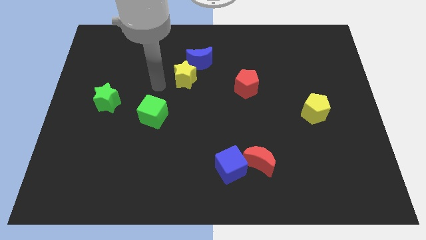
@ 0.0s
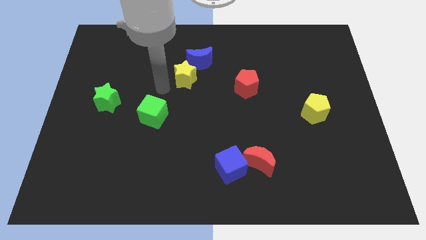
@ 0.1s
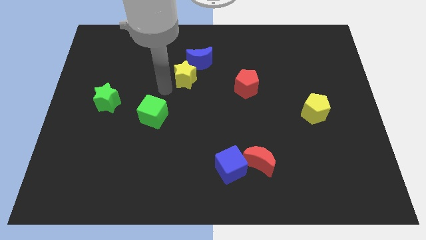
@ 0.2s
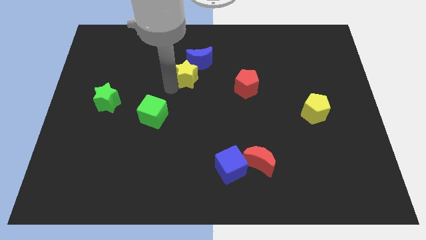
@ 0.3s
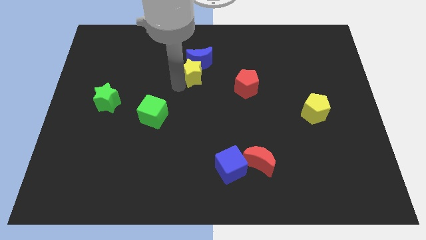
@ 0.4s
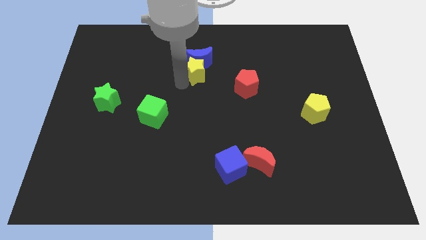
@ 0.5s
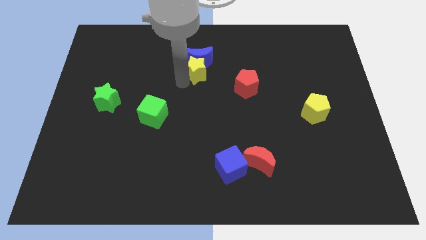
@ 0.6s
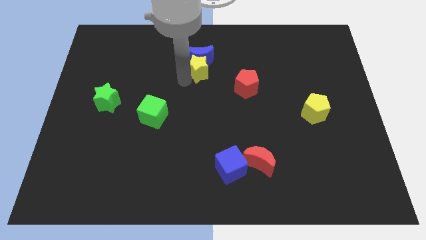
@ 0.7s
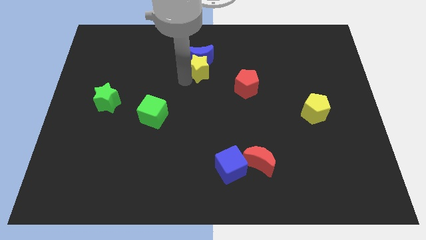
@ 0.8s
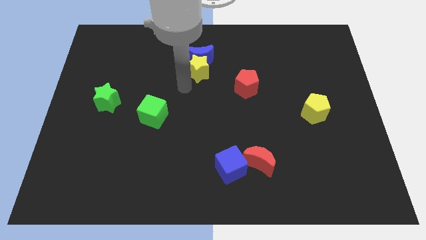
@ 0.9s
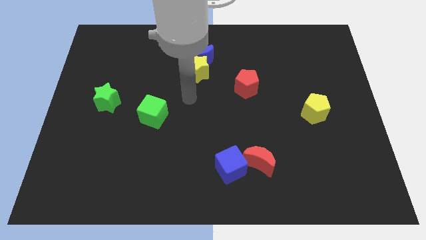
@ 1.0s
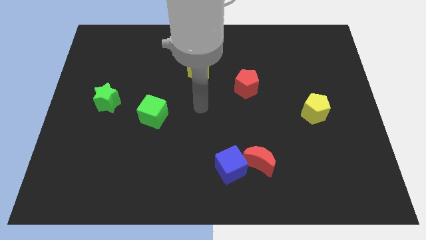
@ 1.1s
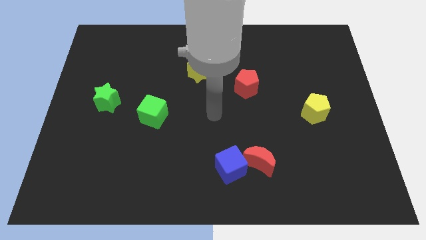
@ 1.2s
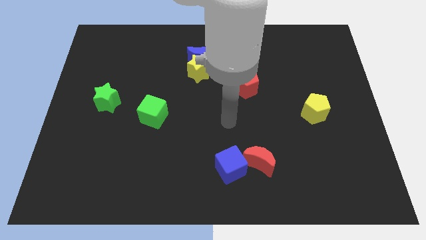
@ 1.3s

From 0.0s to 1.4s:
move yellow star into blue moon

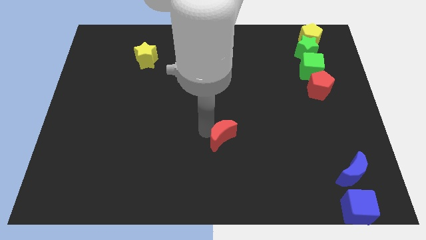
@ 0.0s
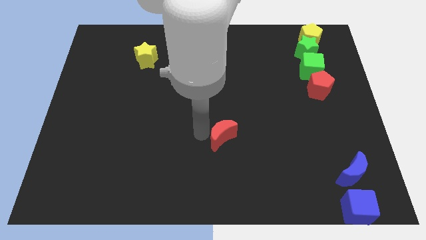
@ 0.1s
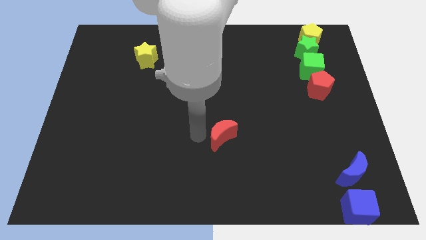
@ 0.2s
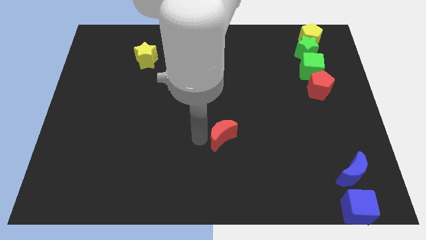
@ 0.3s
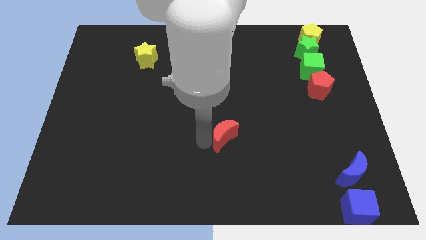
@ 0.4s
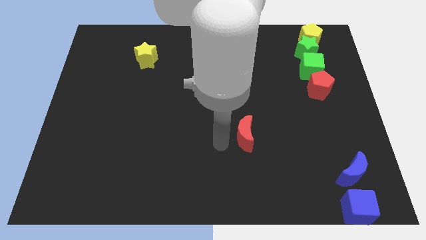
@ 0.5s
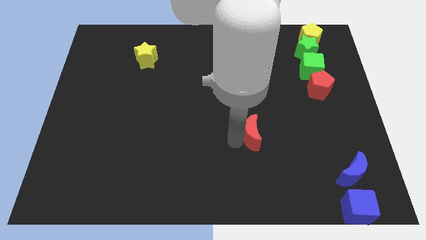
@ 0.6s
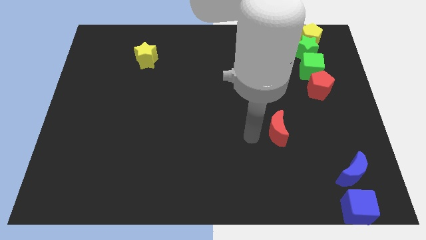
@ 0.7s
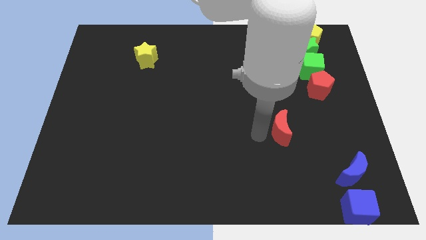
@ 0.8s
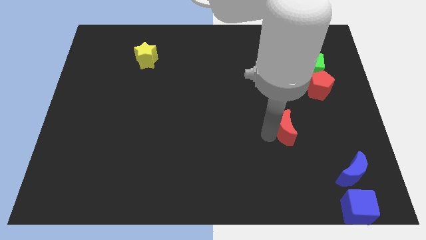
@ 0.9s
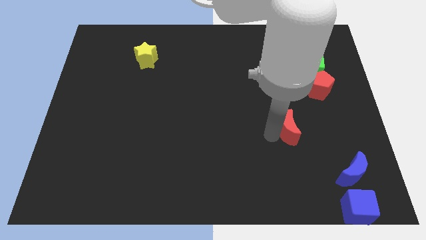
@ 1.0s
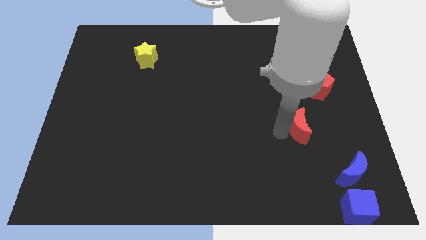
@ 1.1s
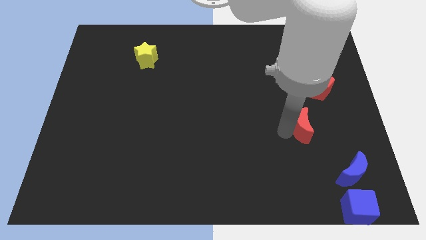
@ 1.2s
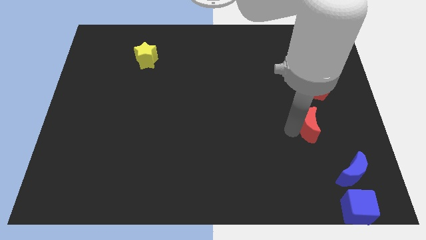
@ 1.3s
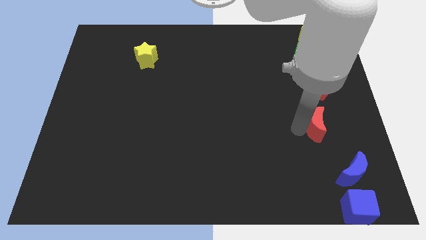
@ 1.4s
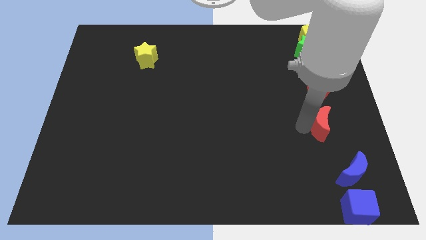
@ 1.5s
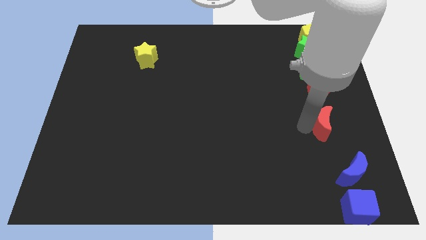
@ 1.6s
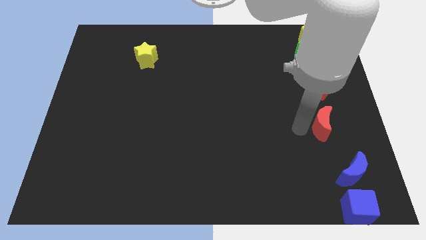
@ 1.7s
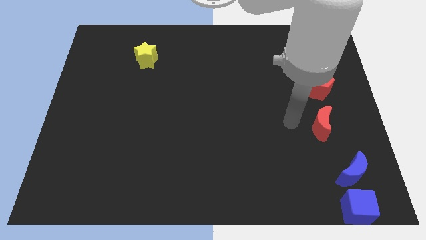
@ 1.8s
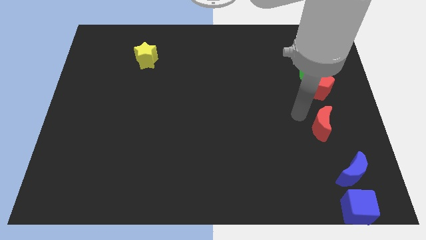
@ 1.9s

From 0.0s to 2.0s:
push the red moon vertically below the red pentagon

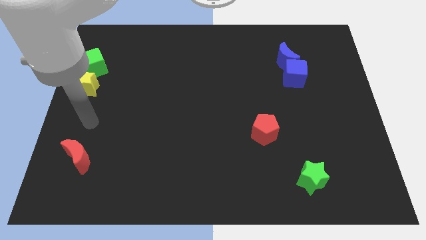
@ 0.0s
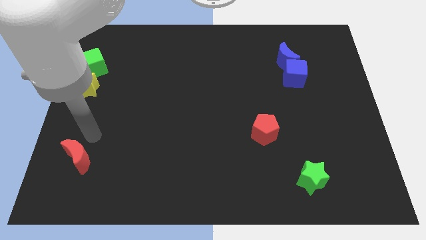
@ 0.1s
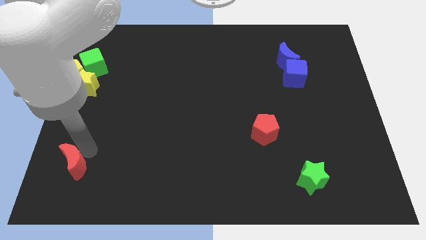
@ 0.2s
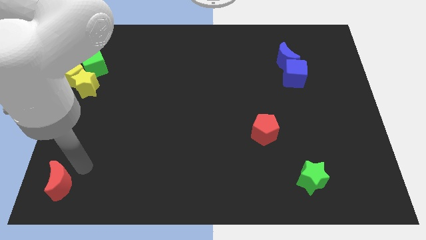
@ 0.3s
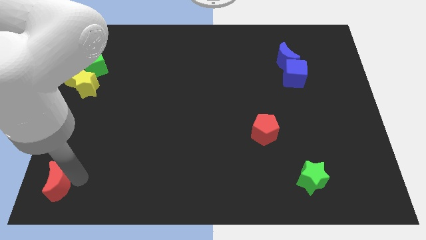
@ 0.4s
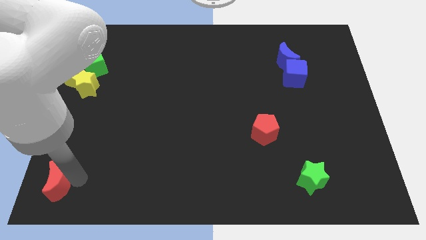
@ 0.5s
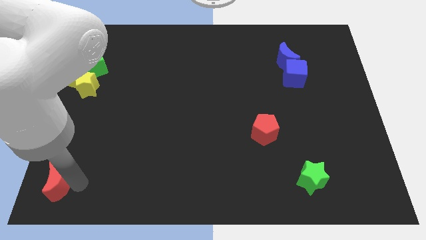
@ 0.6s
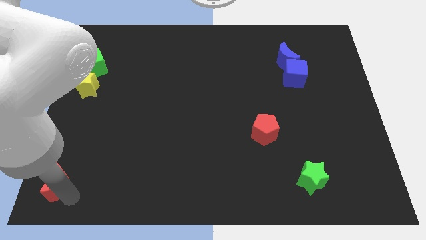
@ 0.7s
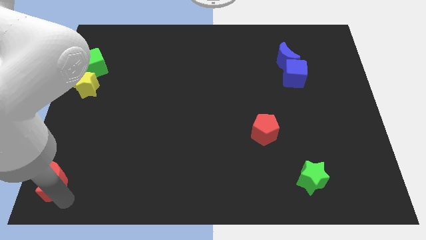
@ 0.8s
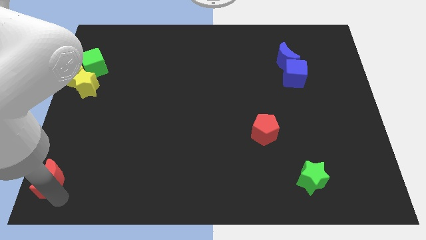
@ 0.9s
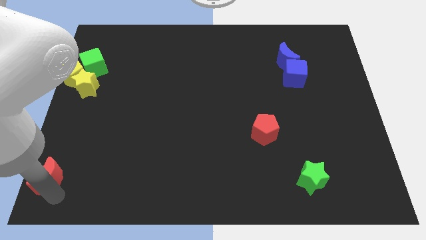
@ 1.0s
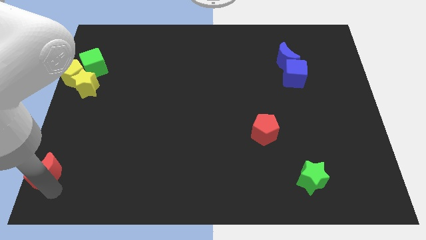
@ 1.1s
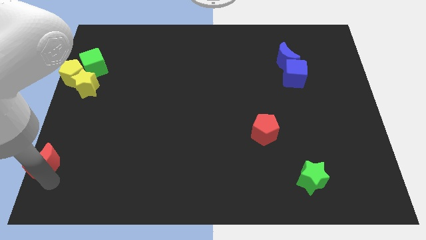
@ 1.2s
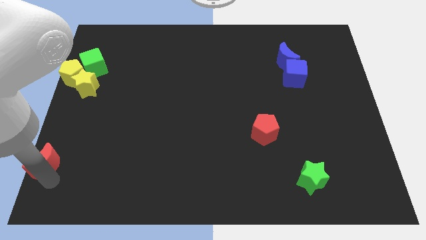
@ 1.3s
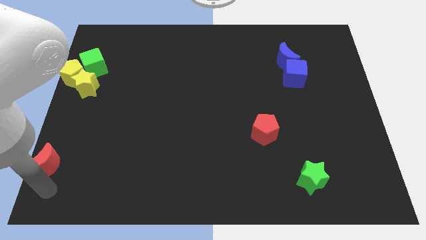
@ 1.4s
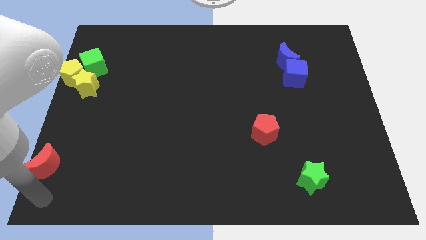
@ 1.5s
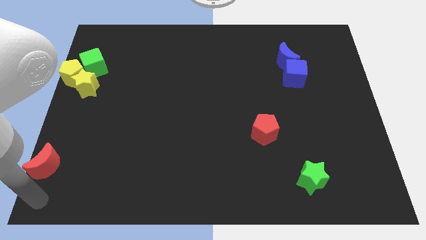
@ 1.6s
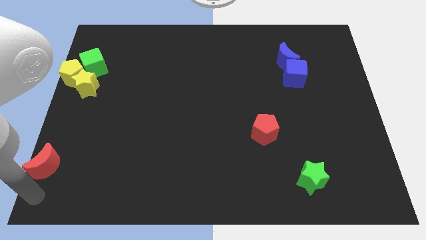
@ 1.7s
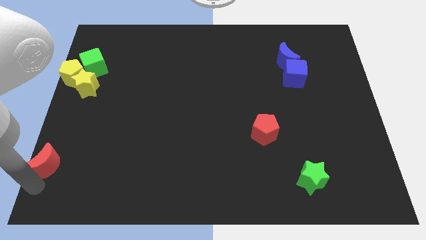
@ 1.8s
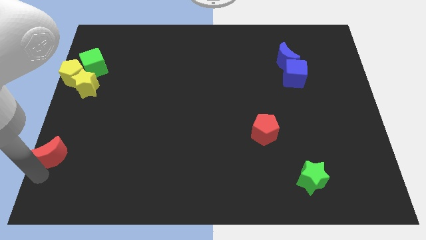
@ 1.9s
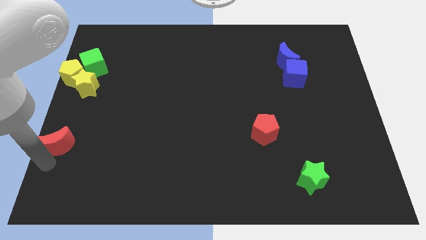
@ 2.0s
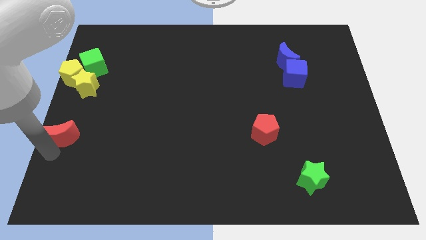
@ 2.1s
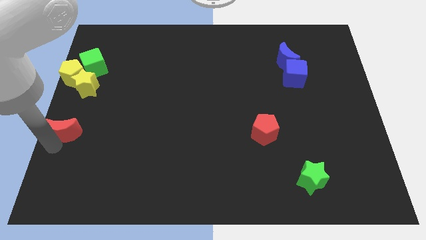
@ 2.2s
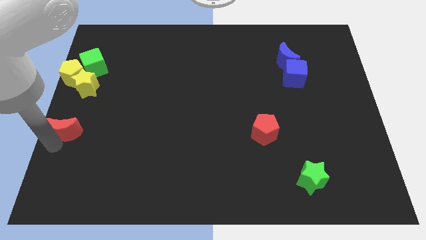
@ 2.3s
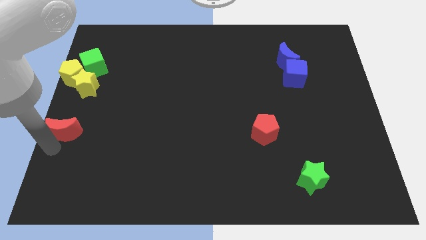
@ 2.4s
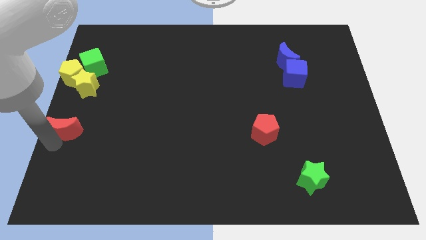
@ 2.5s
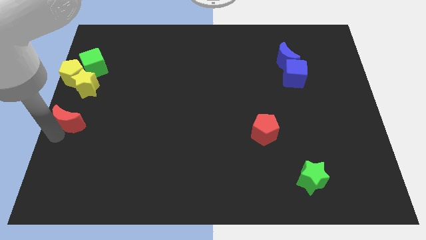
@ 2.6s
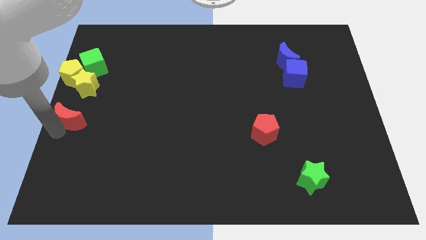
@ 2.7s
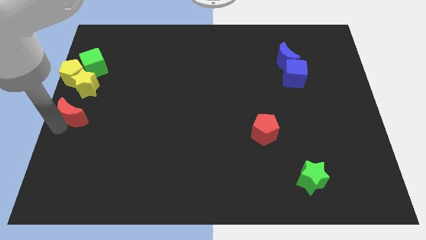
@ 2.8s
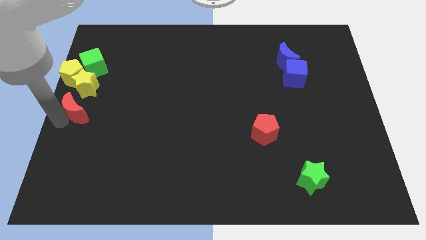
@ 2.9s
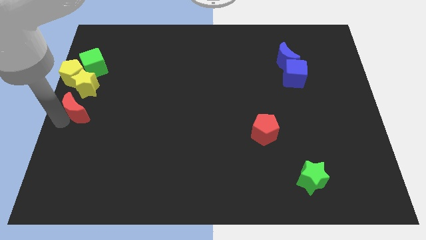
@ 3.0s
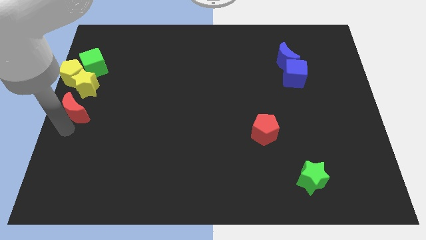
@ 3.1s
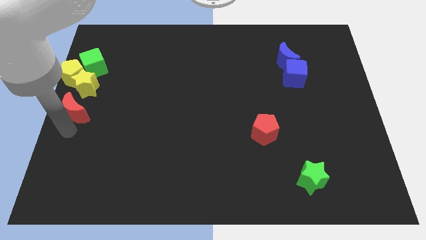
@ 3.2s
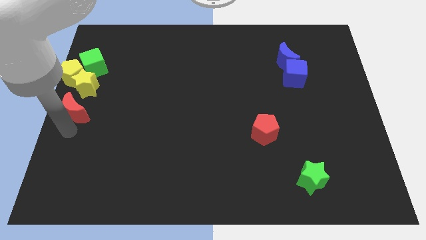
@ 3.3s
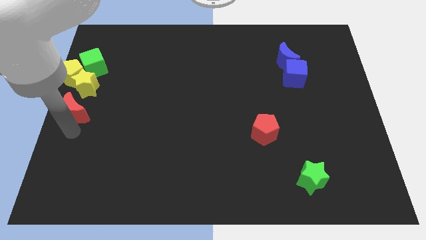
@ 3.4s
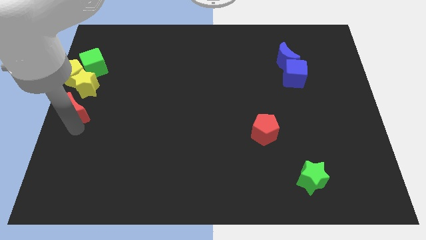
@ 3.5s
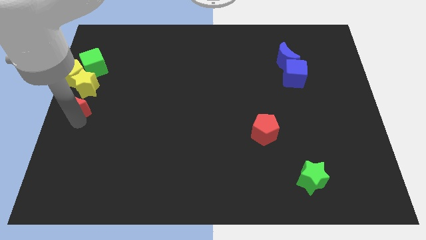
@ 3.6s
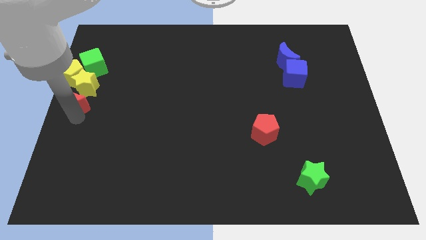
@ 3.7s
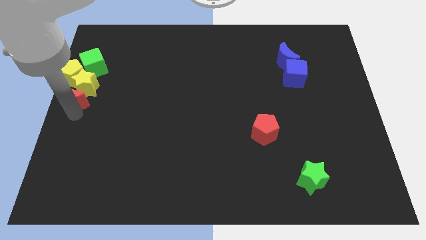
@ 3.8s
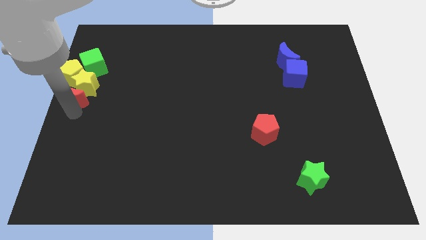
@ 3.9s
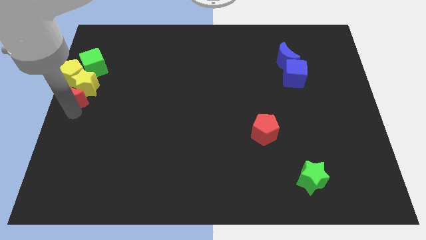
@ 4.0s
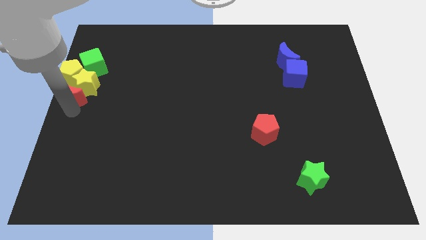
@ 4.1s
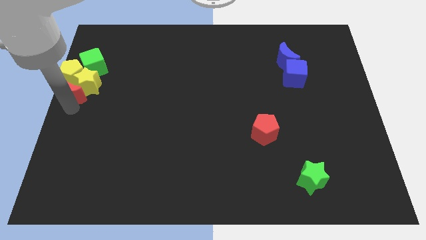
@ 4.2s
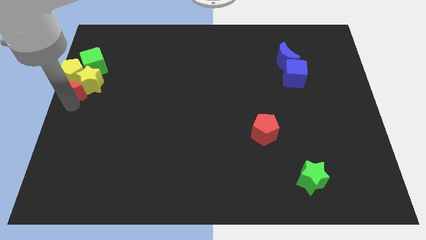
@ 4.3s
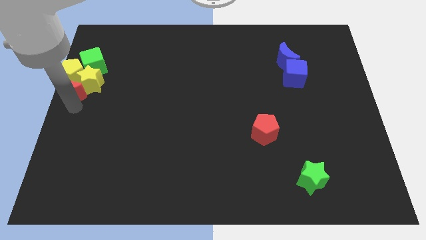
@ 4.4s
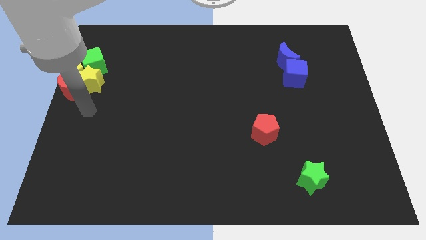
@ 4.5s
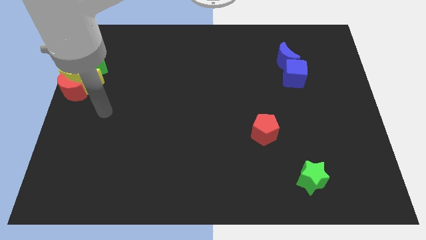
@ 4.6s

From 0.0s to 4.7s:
push the red moon into yellow star

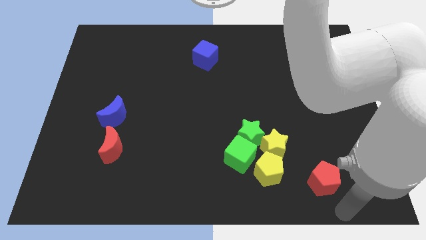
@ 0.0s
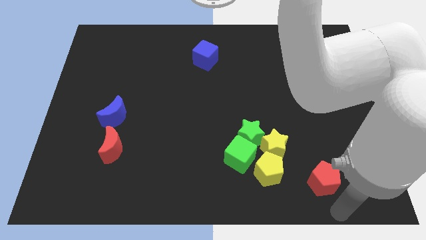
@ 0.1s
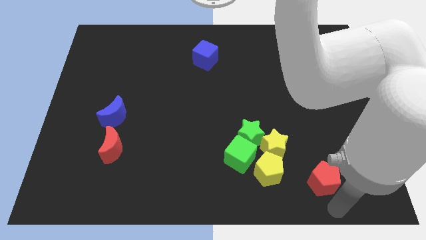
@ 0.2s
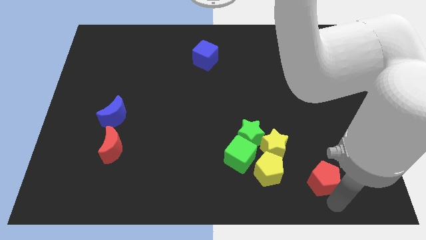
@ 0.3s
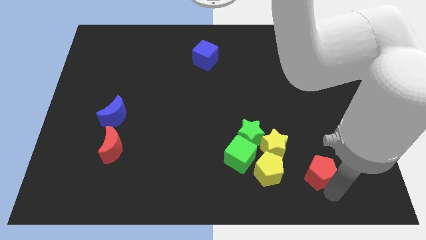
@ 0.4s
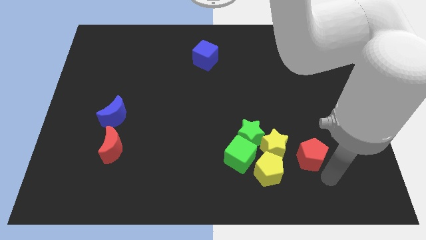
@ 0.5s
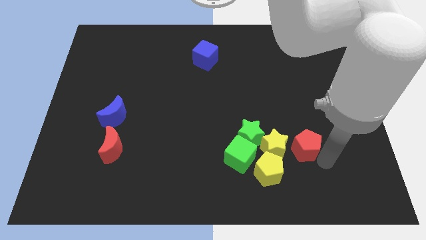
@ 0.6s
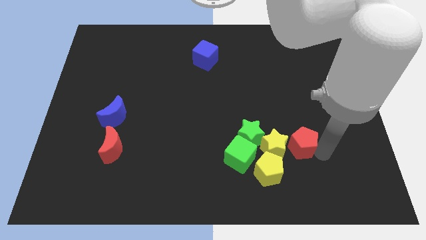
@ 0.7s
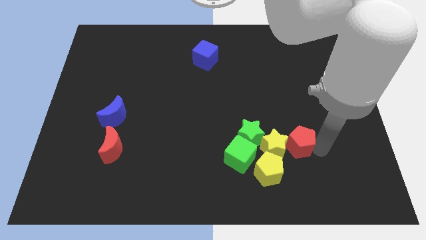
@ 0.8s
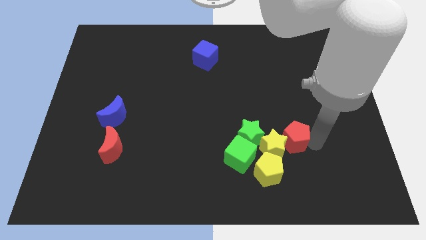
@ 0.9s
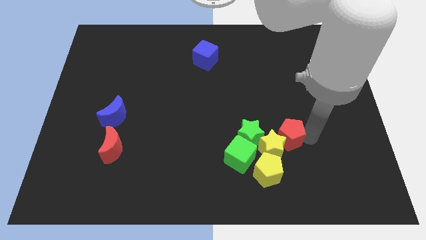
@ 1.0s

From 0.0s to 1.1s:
place red pentagon parallel to green star
